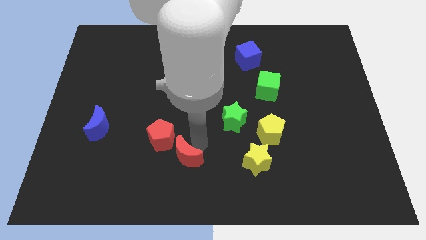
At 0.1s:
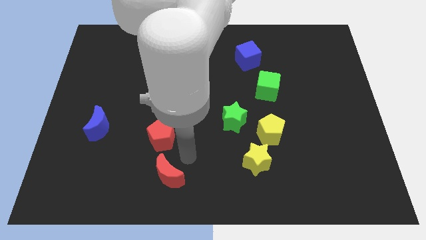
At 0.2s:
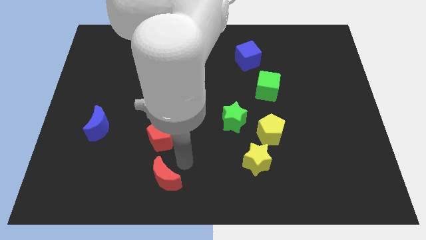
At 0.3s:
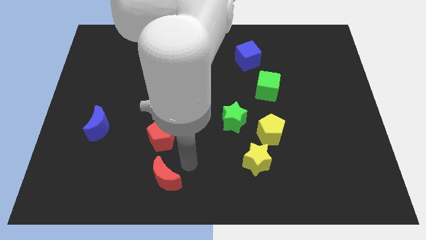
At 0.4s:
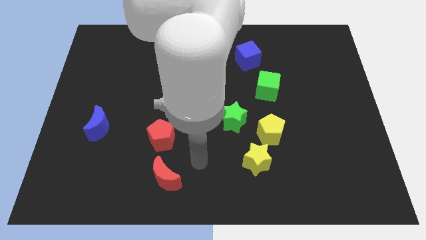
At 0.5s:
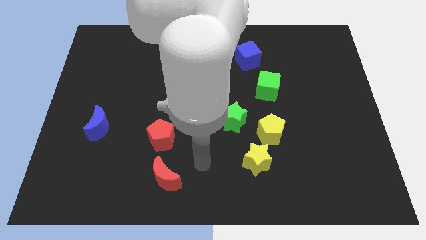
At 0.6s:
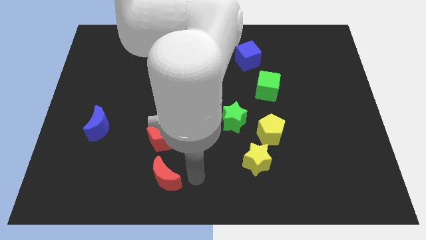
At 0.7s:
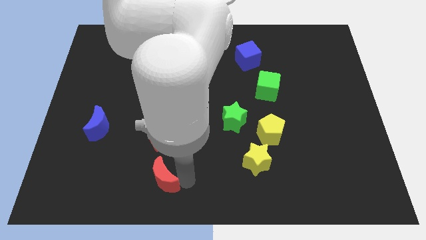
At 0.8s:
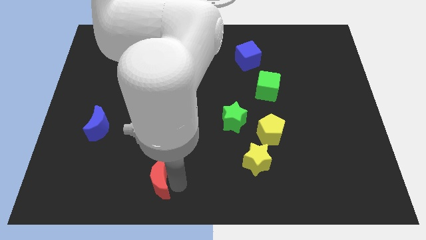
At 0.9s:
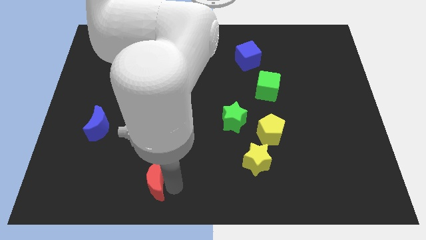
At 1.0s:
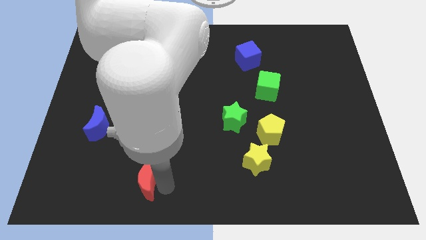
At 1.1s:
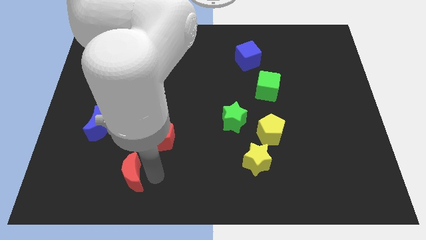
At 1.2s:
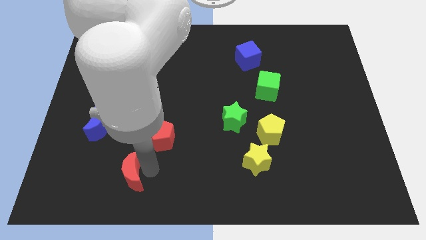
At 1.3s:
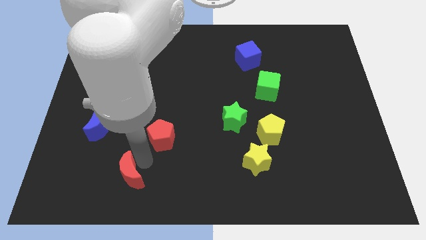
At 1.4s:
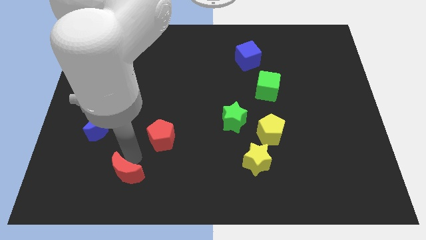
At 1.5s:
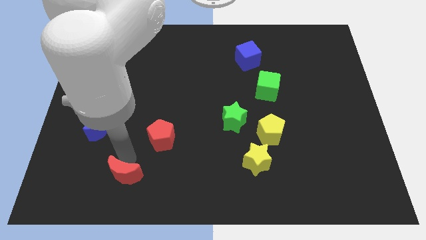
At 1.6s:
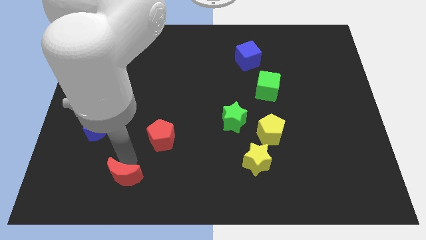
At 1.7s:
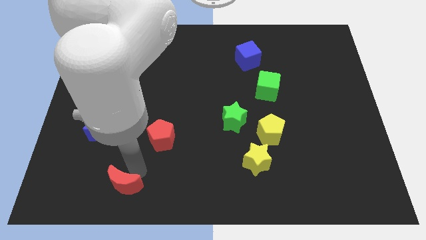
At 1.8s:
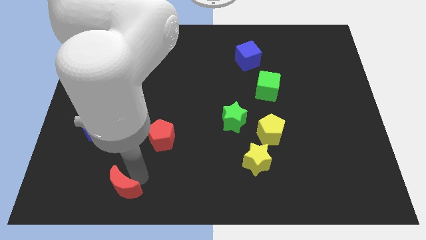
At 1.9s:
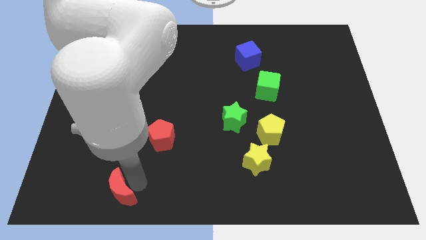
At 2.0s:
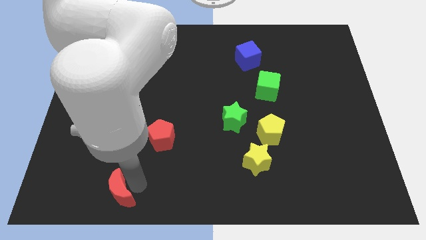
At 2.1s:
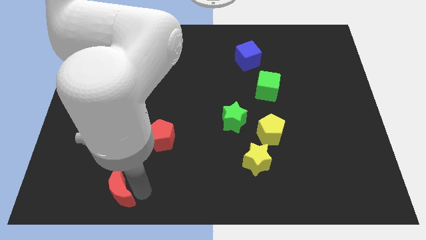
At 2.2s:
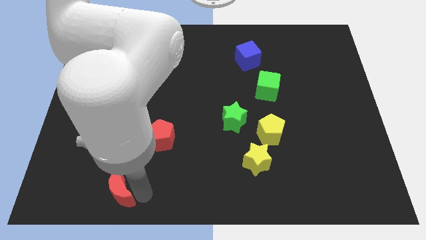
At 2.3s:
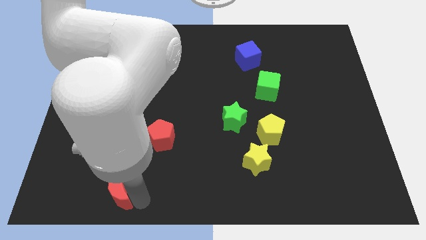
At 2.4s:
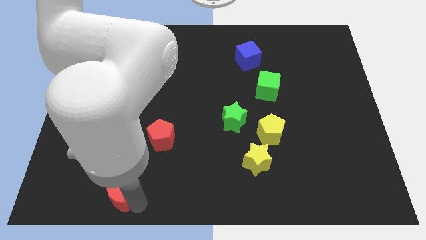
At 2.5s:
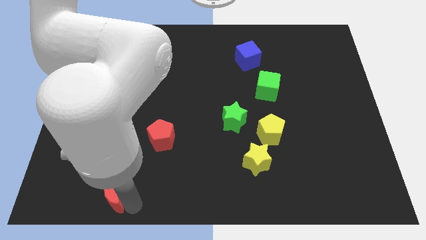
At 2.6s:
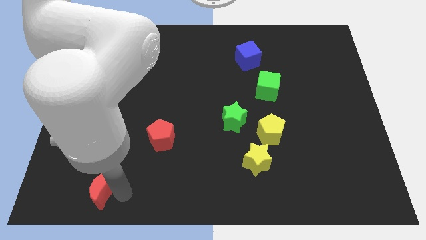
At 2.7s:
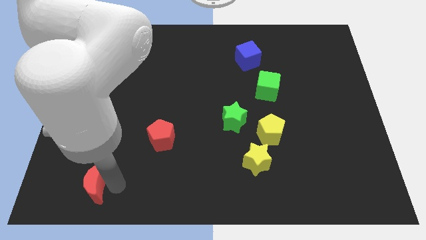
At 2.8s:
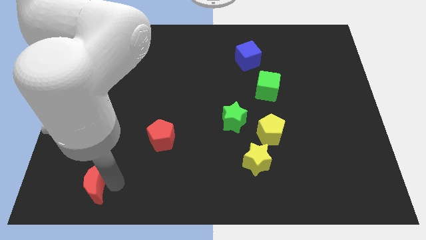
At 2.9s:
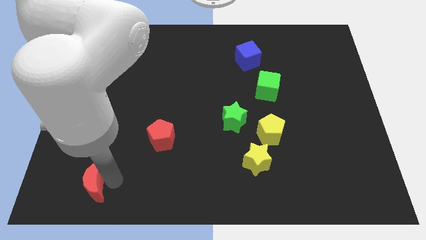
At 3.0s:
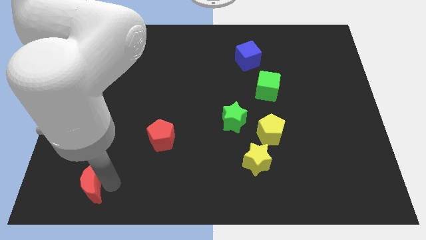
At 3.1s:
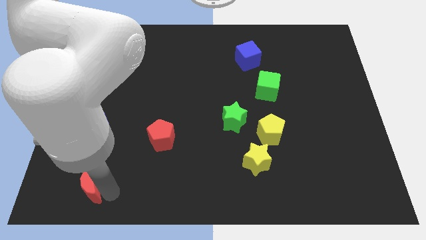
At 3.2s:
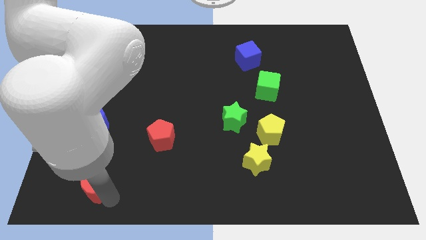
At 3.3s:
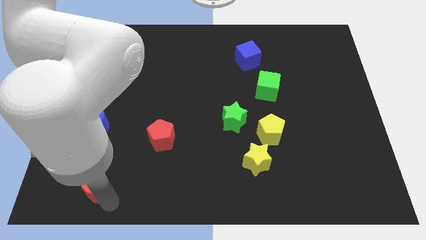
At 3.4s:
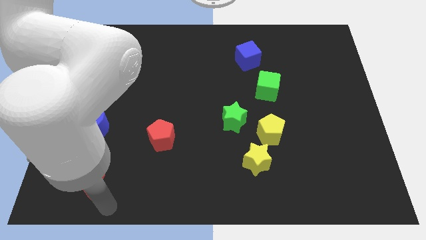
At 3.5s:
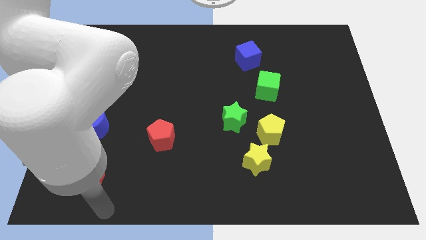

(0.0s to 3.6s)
move the red crescent to the bottom left of the board

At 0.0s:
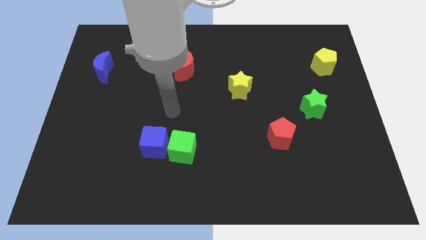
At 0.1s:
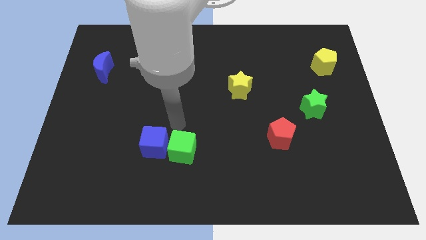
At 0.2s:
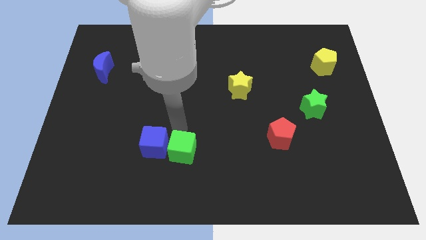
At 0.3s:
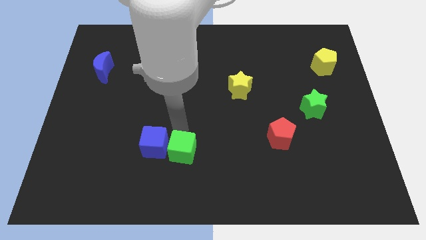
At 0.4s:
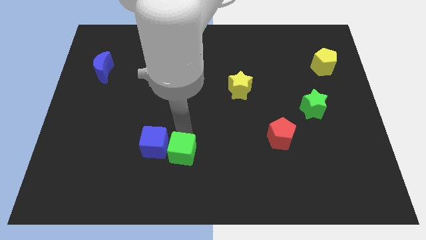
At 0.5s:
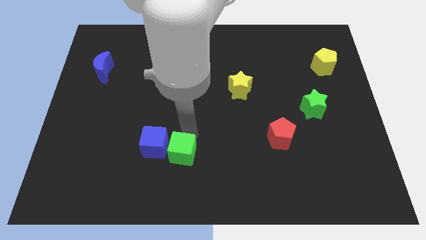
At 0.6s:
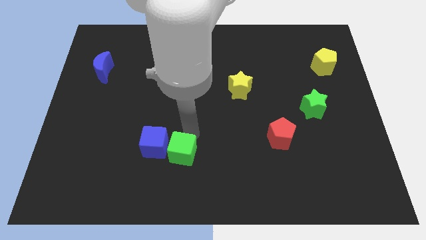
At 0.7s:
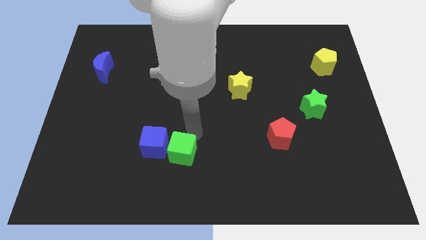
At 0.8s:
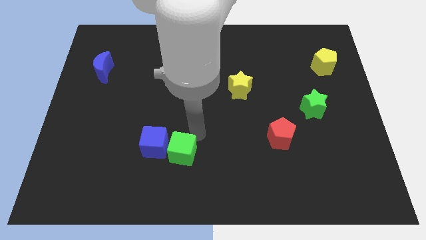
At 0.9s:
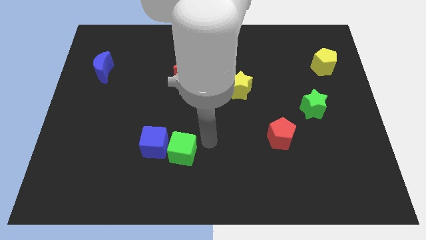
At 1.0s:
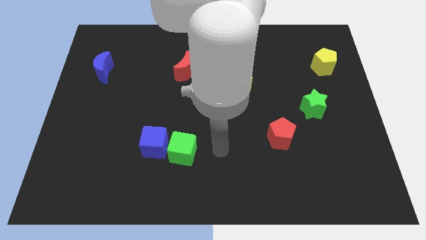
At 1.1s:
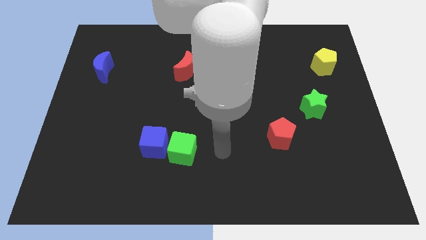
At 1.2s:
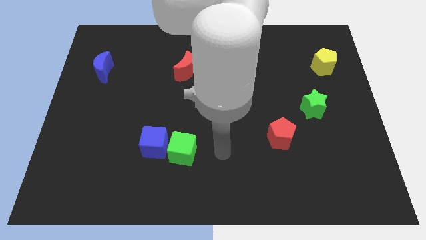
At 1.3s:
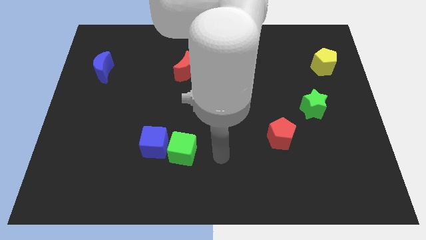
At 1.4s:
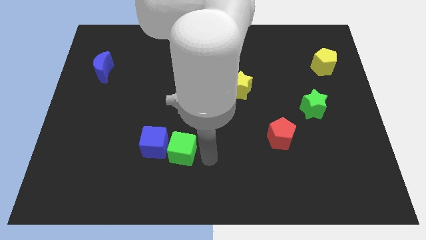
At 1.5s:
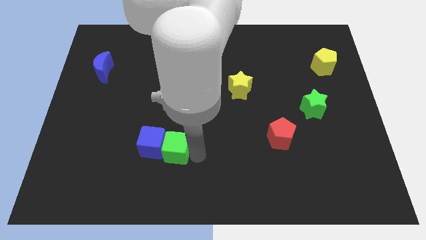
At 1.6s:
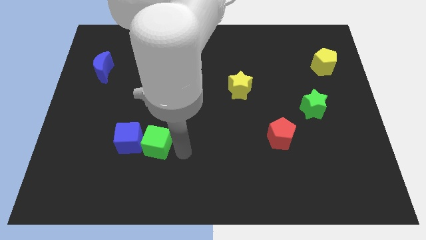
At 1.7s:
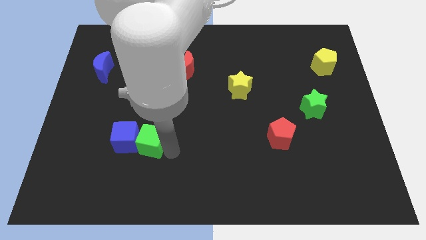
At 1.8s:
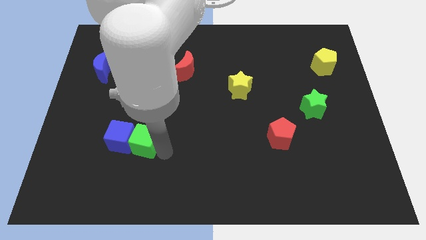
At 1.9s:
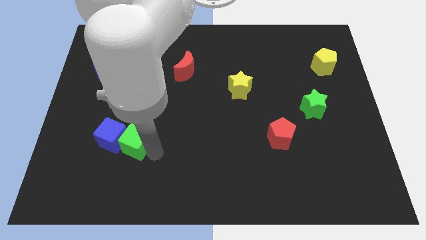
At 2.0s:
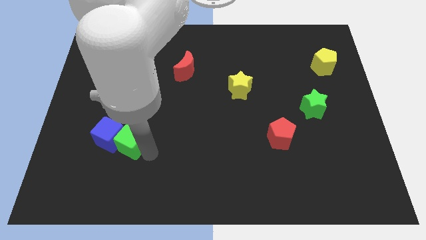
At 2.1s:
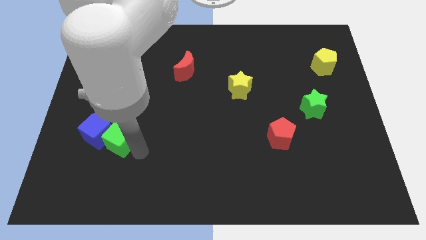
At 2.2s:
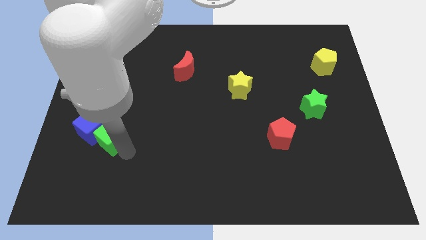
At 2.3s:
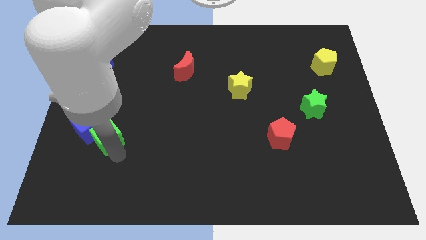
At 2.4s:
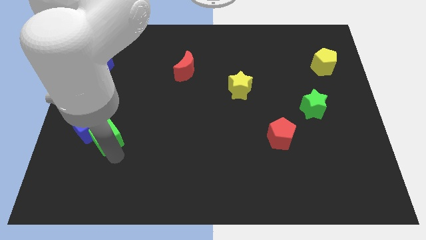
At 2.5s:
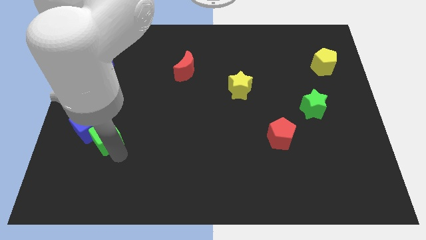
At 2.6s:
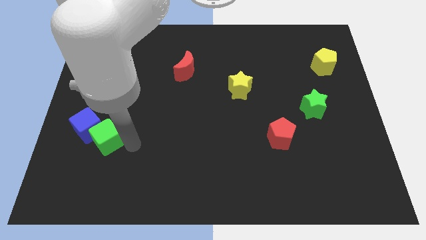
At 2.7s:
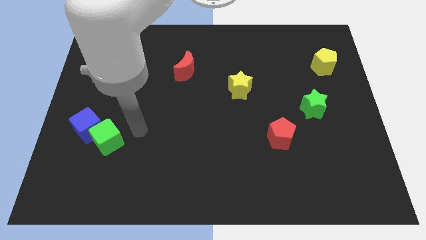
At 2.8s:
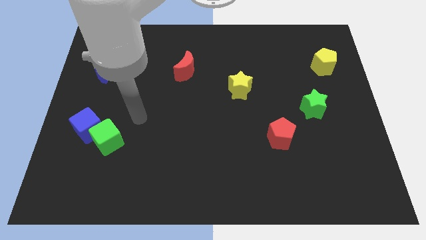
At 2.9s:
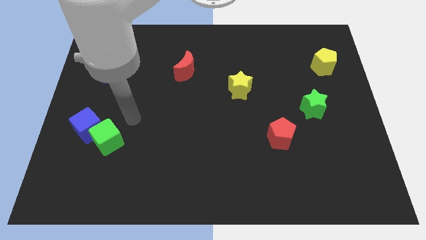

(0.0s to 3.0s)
push the cubes together towards left side bottom

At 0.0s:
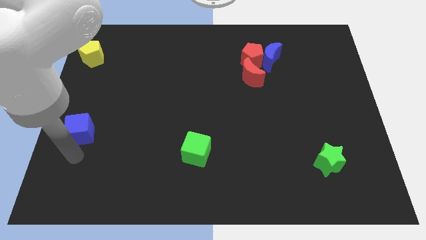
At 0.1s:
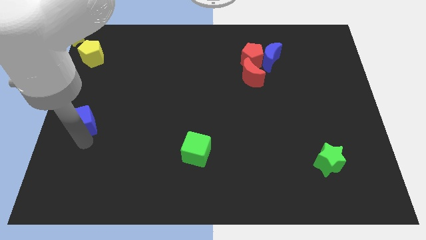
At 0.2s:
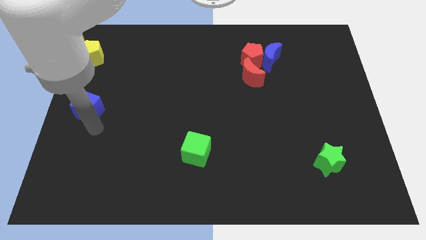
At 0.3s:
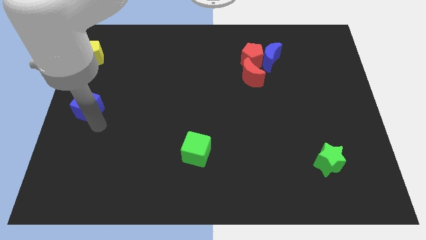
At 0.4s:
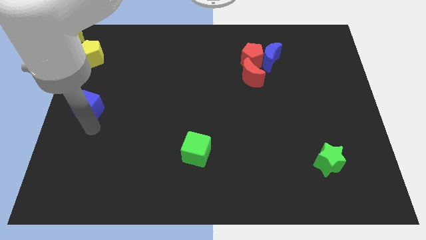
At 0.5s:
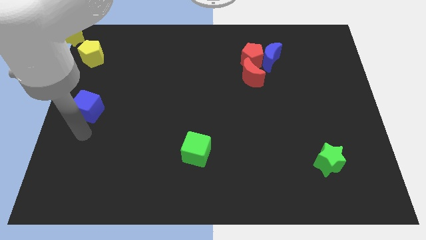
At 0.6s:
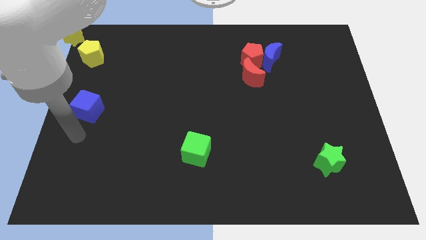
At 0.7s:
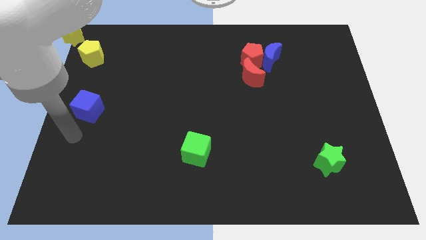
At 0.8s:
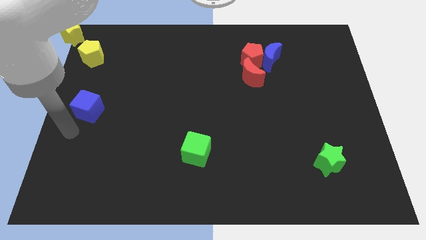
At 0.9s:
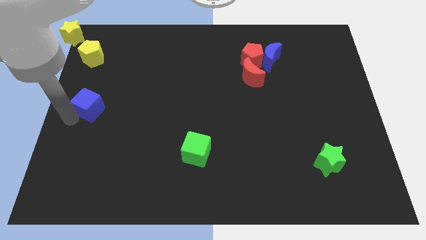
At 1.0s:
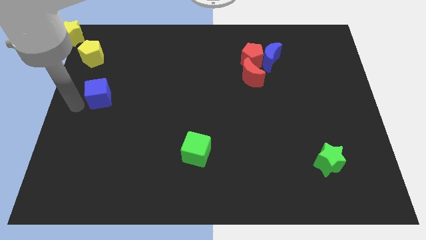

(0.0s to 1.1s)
push the blue cube to the top of the board

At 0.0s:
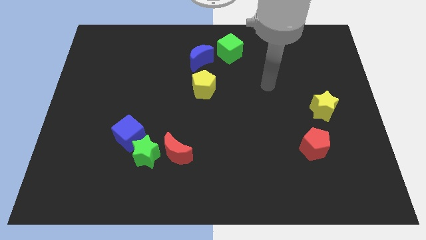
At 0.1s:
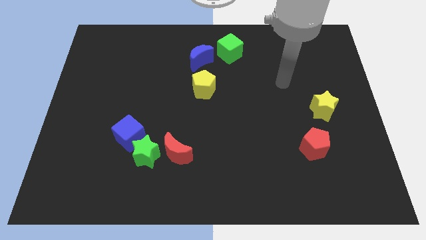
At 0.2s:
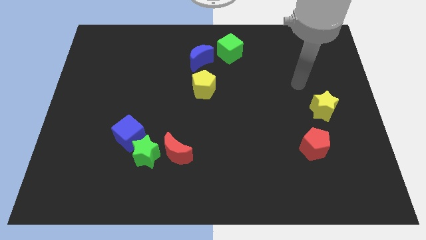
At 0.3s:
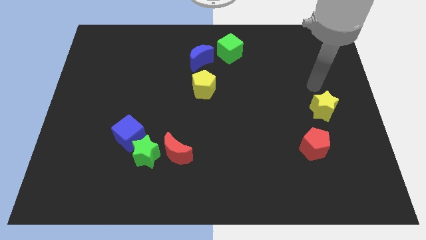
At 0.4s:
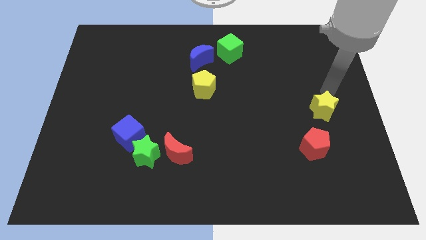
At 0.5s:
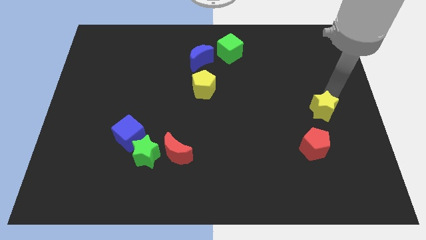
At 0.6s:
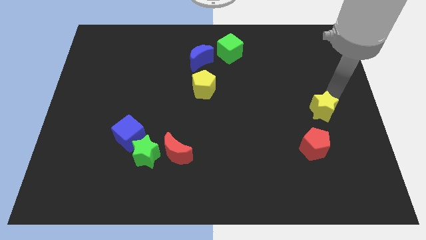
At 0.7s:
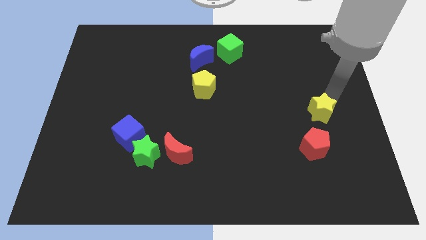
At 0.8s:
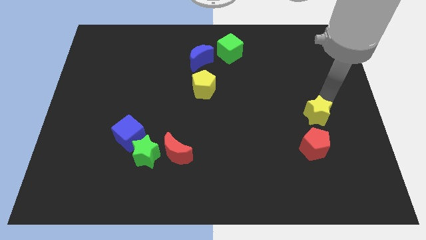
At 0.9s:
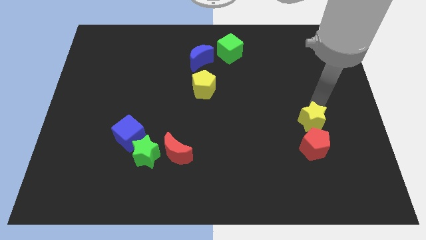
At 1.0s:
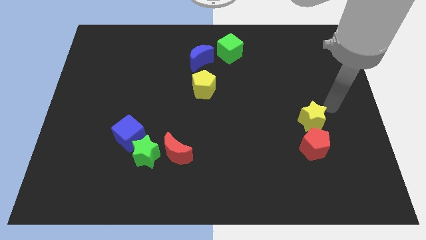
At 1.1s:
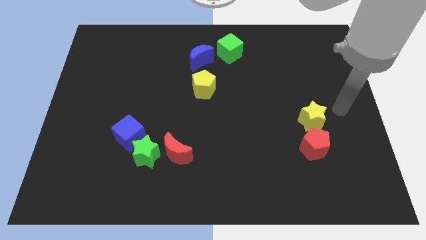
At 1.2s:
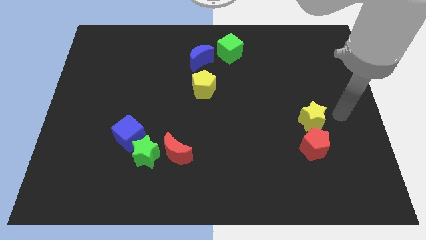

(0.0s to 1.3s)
push the yellow star close to the top side of the red pentagon
